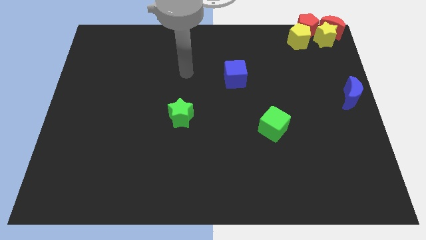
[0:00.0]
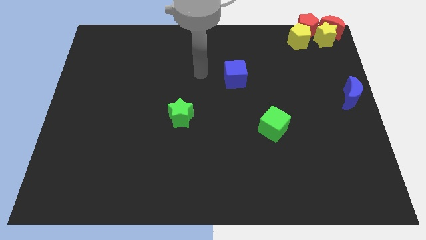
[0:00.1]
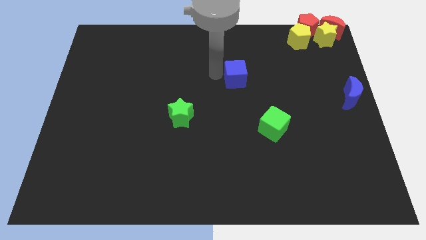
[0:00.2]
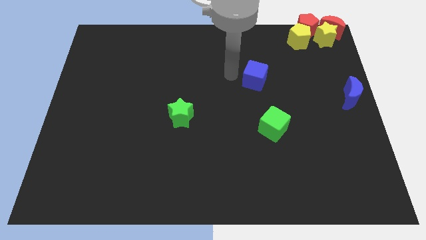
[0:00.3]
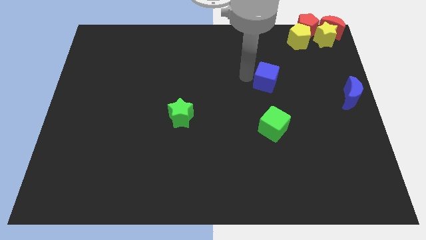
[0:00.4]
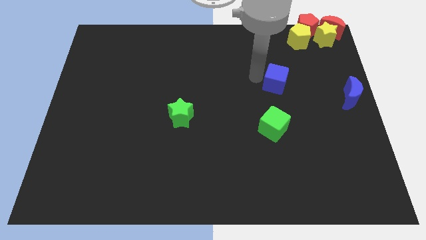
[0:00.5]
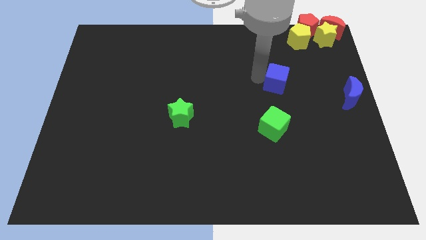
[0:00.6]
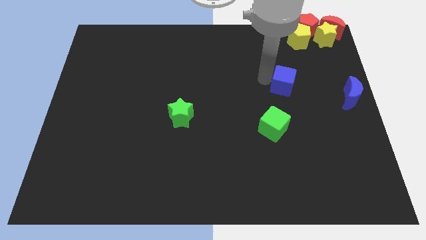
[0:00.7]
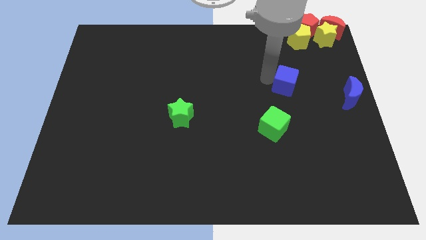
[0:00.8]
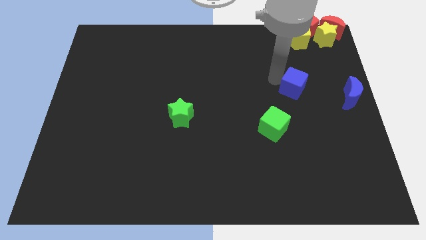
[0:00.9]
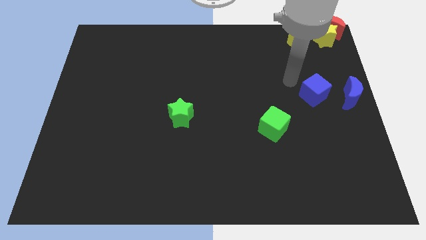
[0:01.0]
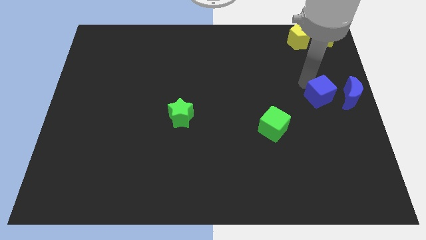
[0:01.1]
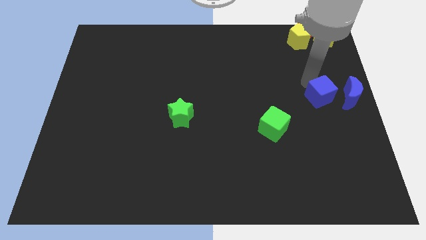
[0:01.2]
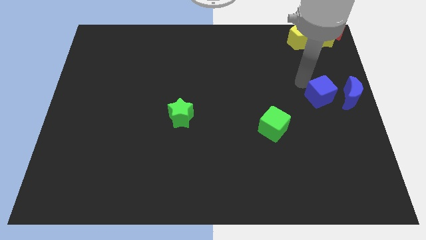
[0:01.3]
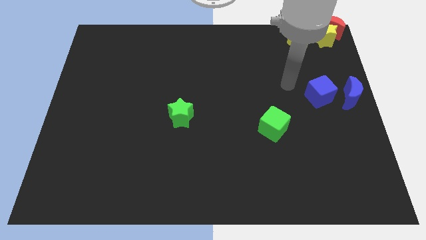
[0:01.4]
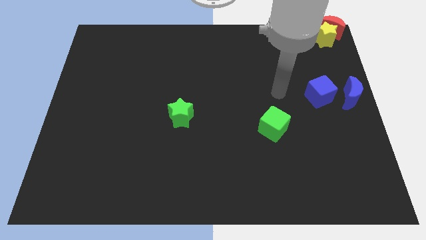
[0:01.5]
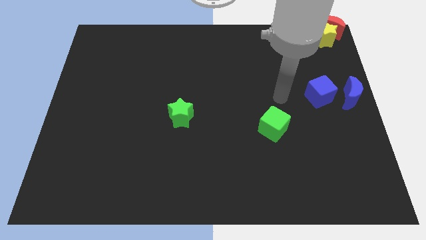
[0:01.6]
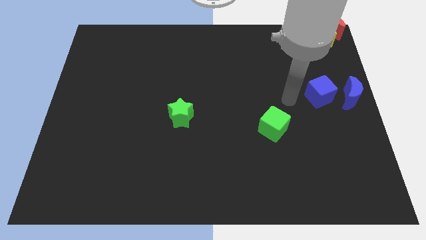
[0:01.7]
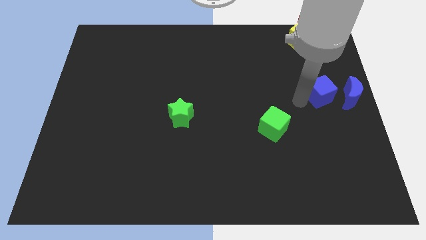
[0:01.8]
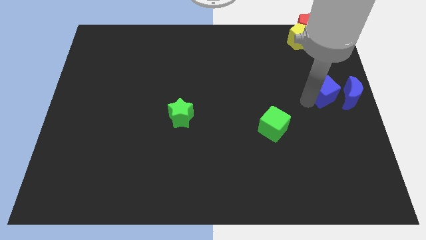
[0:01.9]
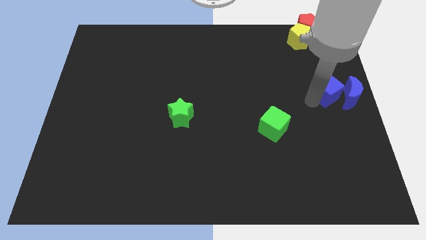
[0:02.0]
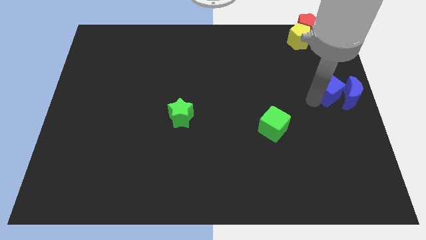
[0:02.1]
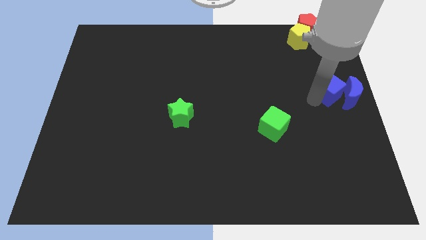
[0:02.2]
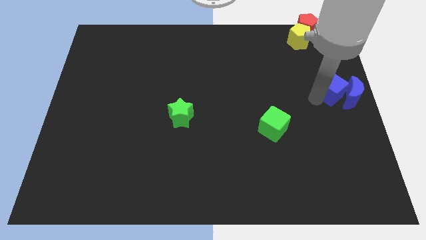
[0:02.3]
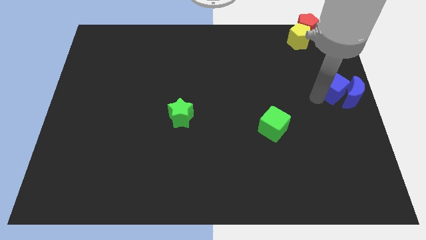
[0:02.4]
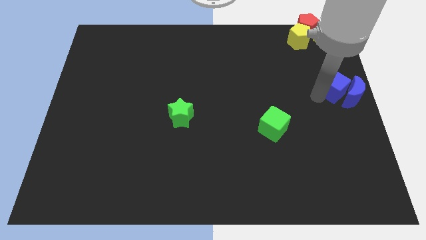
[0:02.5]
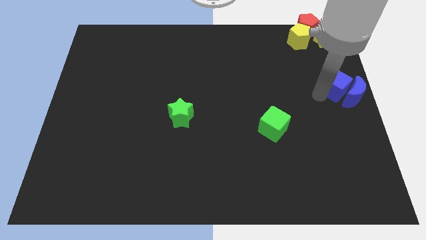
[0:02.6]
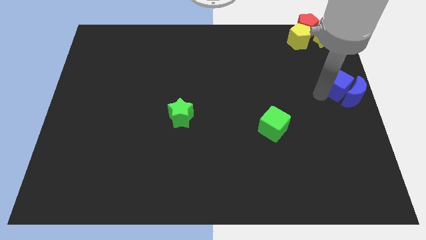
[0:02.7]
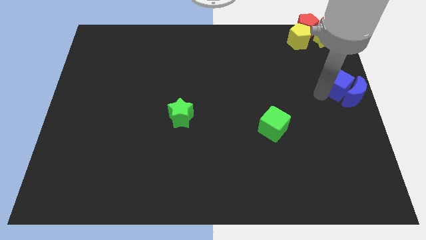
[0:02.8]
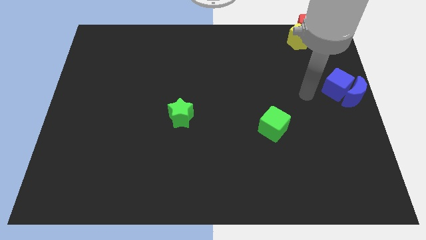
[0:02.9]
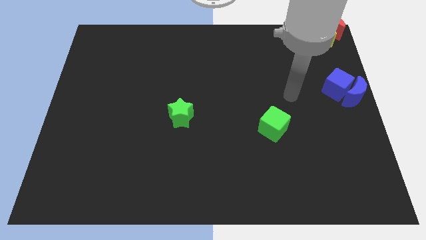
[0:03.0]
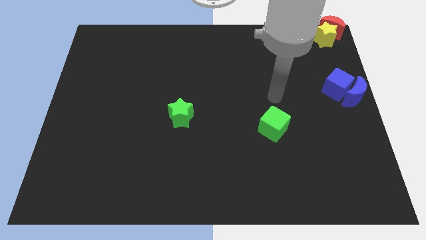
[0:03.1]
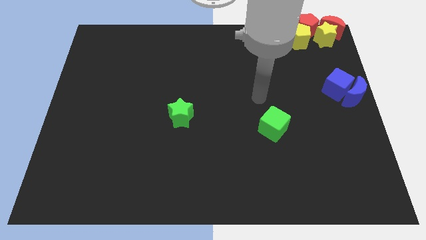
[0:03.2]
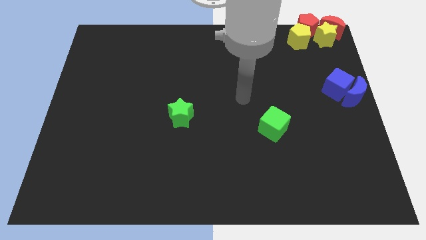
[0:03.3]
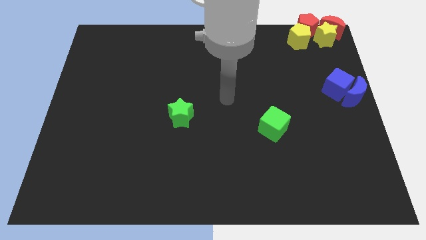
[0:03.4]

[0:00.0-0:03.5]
push the blue cube into blue moon

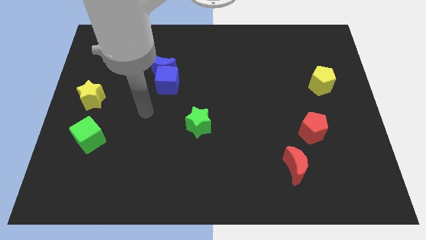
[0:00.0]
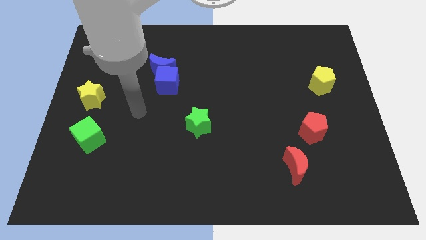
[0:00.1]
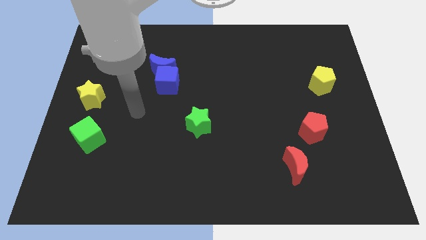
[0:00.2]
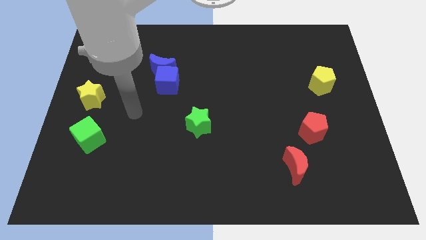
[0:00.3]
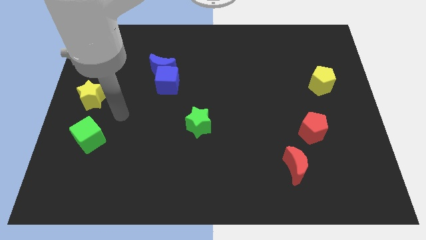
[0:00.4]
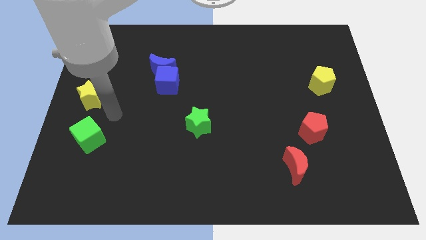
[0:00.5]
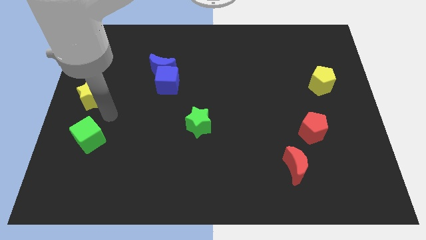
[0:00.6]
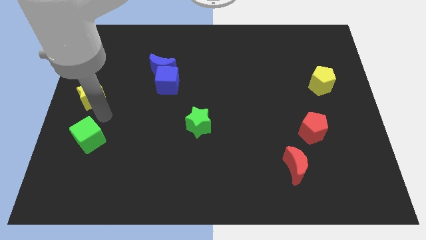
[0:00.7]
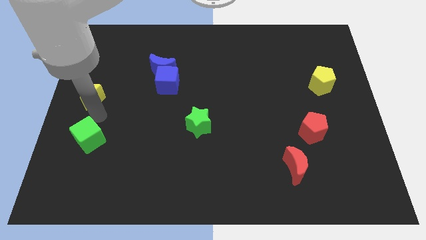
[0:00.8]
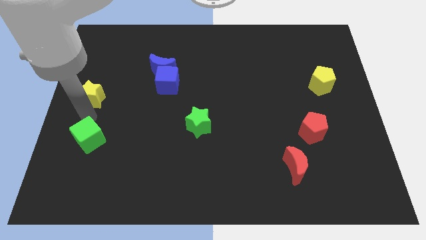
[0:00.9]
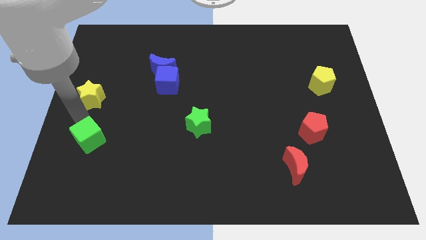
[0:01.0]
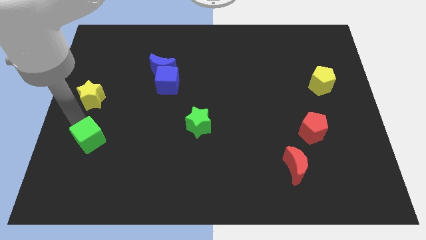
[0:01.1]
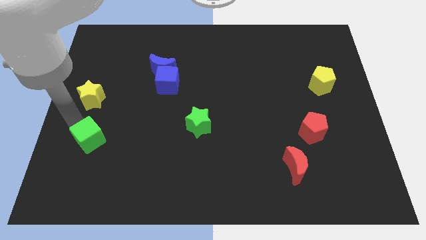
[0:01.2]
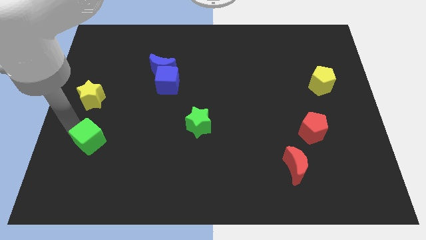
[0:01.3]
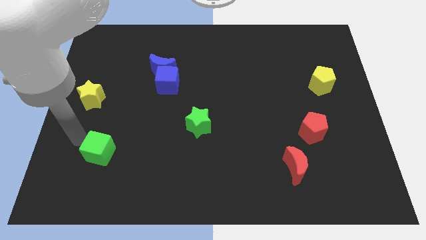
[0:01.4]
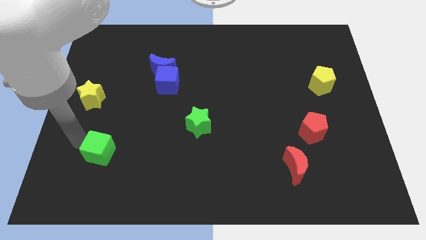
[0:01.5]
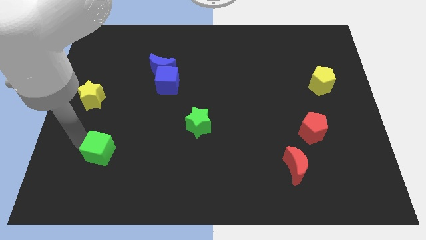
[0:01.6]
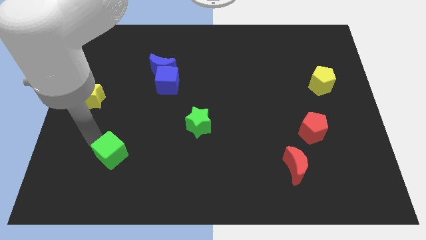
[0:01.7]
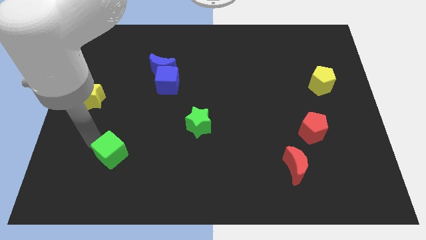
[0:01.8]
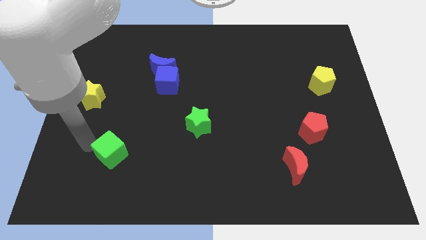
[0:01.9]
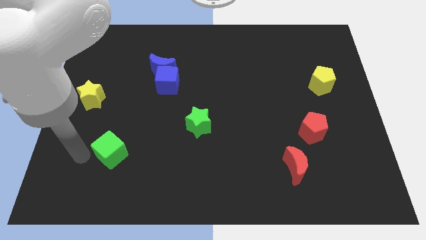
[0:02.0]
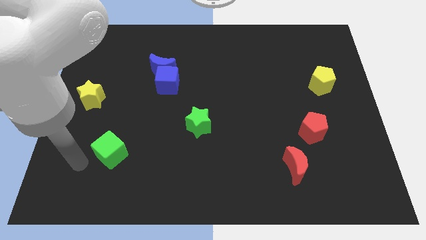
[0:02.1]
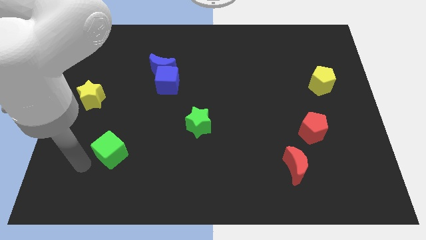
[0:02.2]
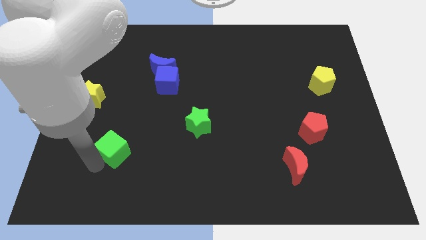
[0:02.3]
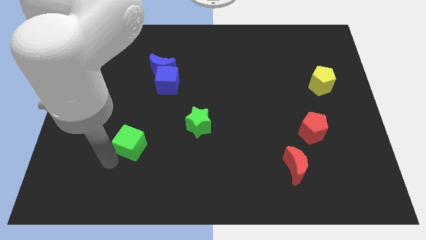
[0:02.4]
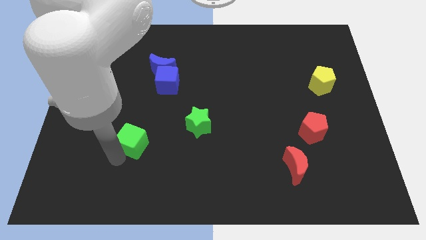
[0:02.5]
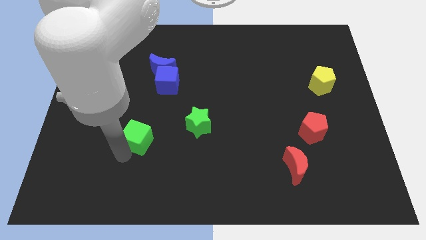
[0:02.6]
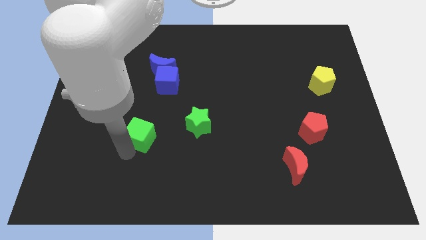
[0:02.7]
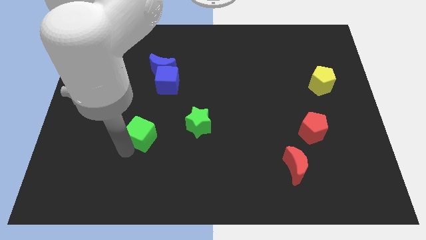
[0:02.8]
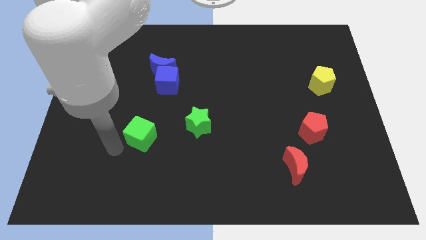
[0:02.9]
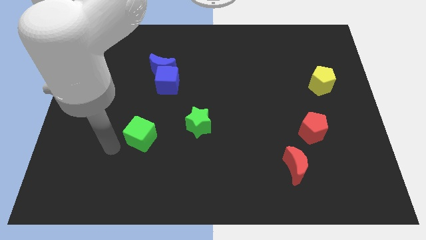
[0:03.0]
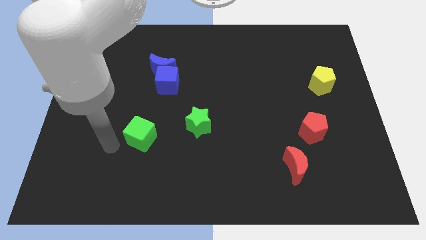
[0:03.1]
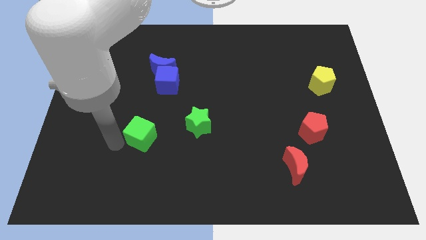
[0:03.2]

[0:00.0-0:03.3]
slide the green cube diagonally bottom right to the yellow star

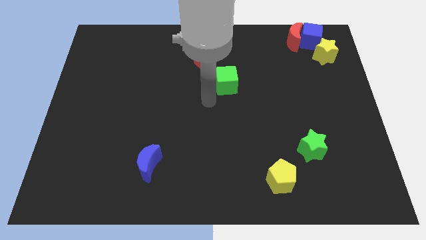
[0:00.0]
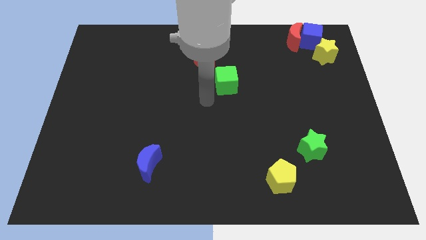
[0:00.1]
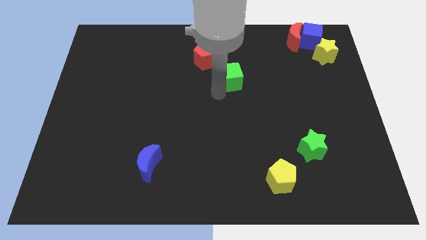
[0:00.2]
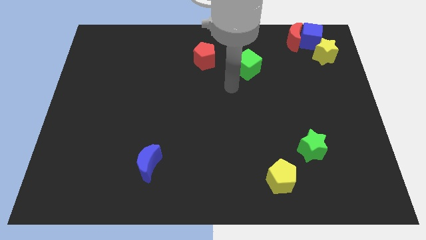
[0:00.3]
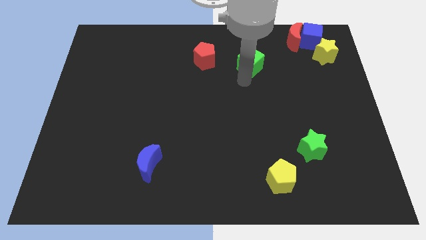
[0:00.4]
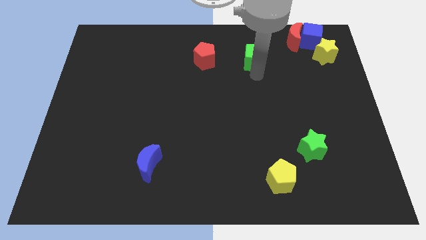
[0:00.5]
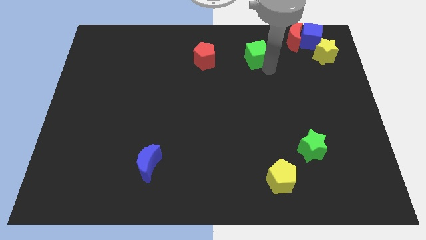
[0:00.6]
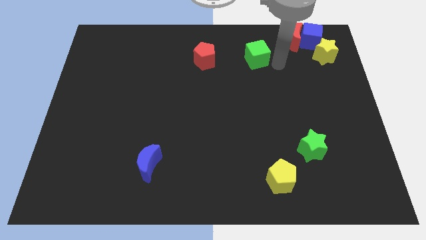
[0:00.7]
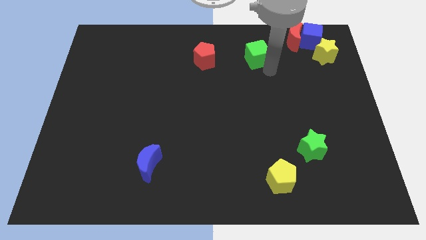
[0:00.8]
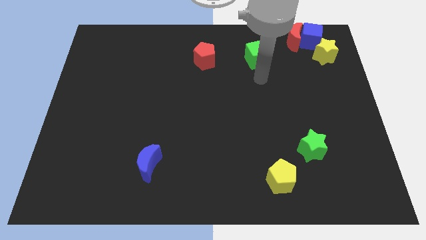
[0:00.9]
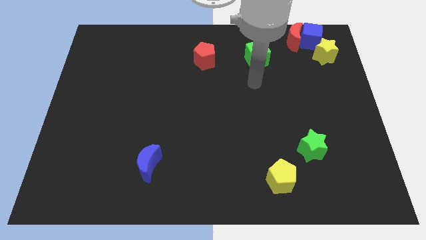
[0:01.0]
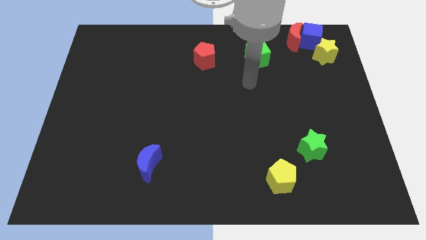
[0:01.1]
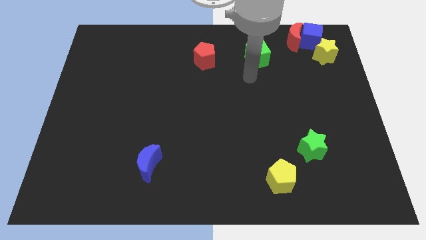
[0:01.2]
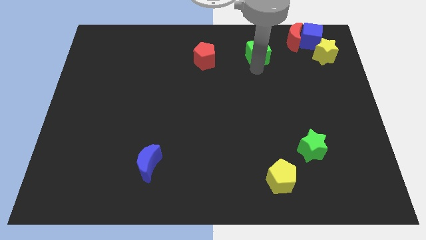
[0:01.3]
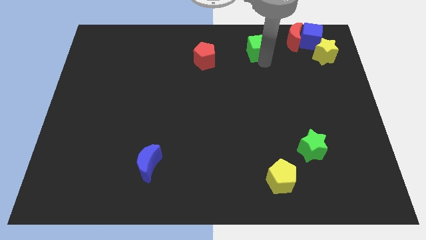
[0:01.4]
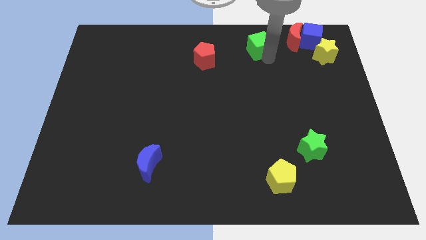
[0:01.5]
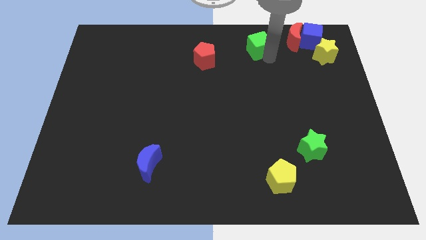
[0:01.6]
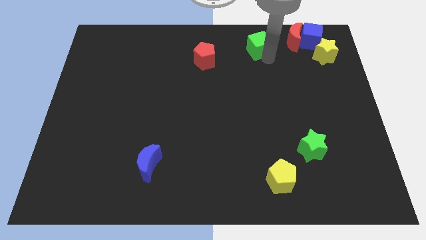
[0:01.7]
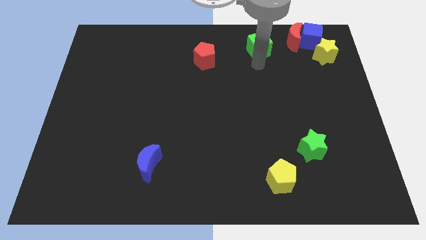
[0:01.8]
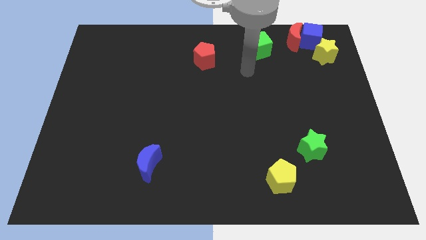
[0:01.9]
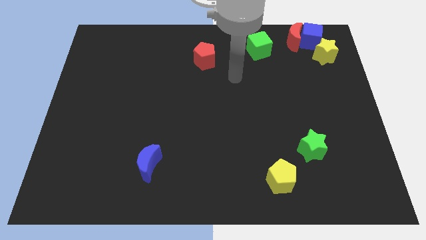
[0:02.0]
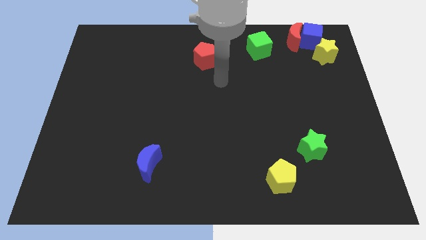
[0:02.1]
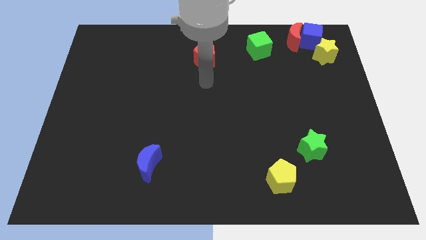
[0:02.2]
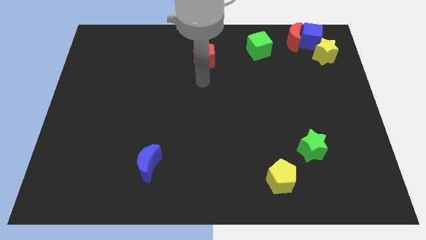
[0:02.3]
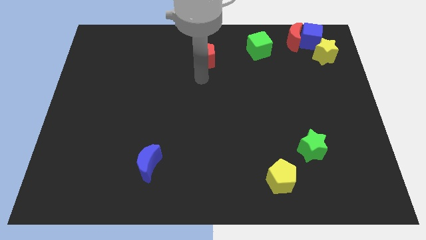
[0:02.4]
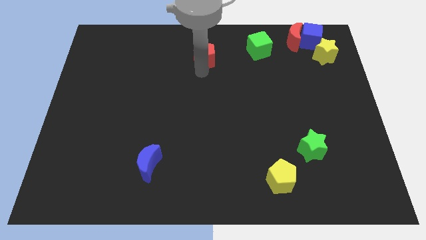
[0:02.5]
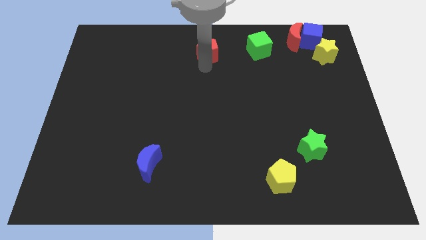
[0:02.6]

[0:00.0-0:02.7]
move green cube to the red moon
